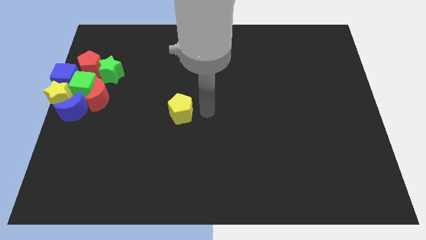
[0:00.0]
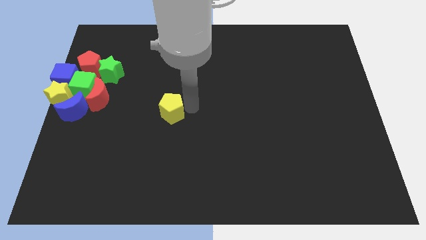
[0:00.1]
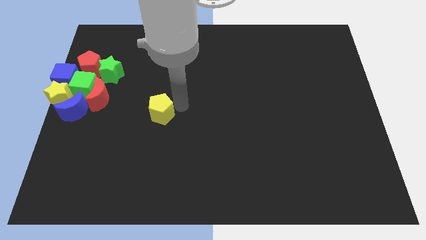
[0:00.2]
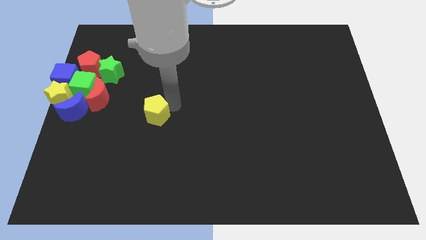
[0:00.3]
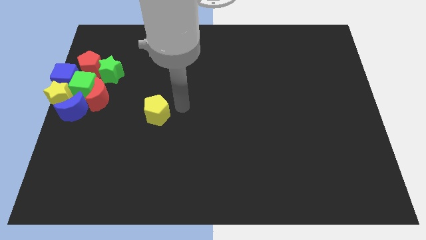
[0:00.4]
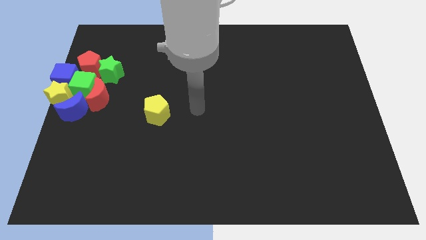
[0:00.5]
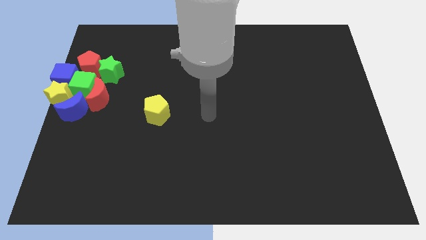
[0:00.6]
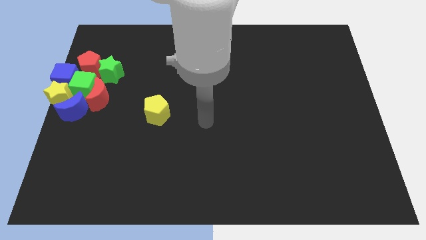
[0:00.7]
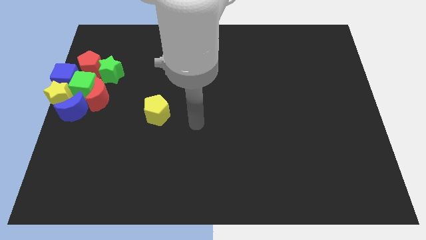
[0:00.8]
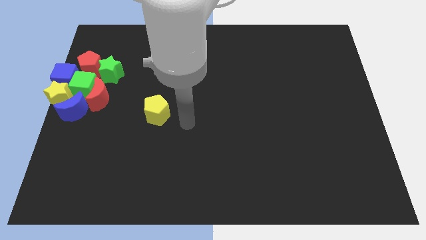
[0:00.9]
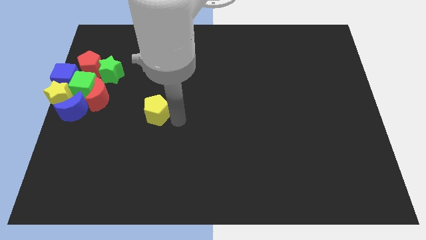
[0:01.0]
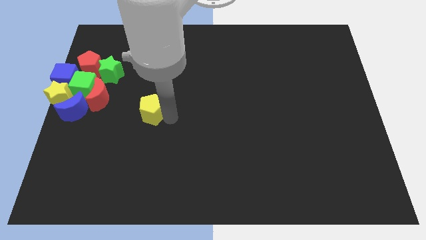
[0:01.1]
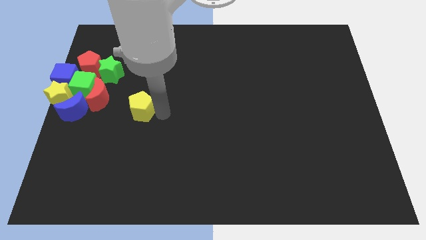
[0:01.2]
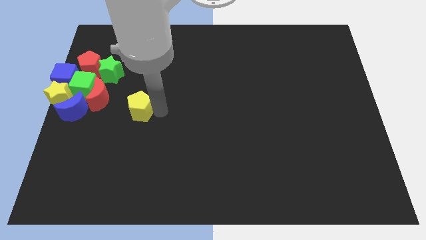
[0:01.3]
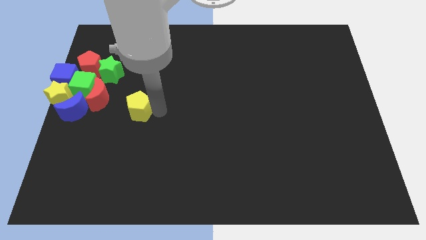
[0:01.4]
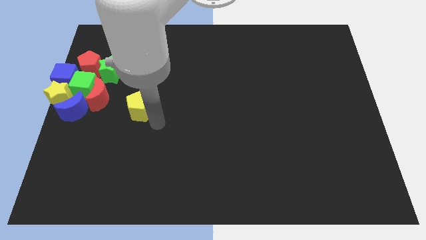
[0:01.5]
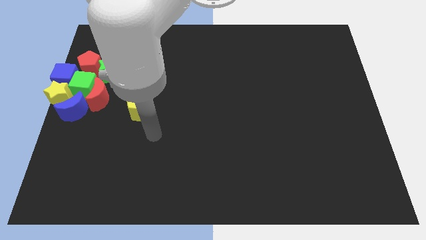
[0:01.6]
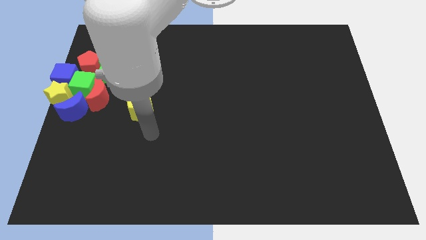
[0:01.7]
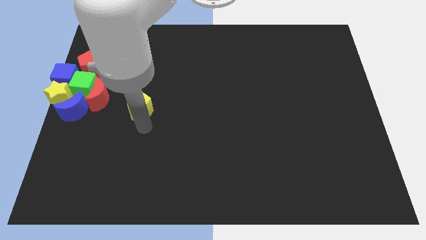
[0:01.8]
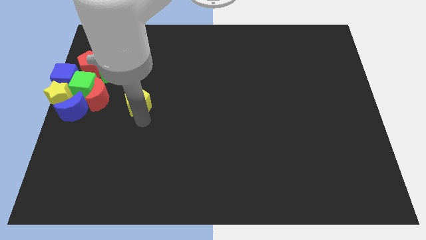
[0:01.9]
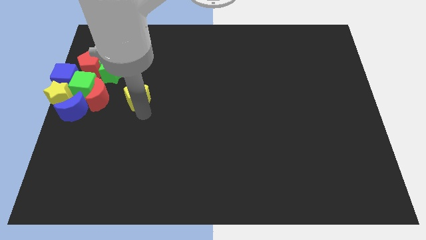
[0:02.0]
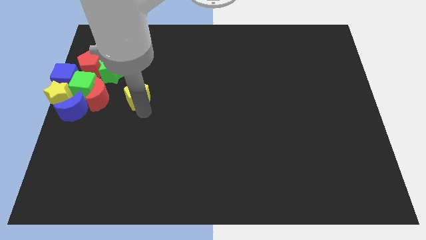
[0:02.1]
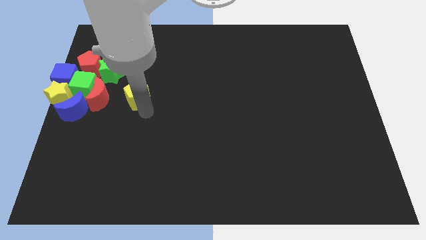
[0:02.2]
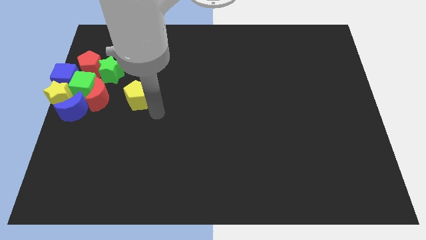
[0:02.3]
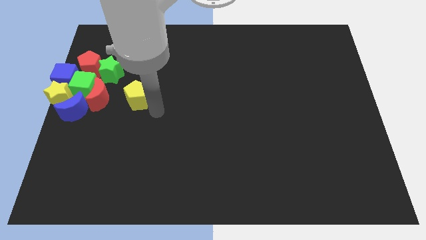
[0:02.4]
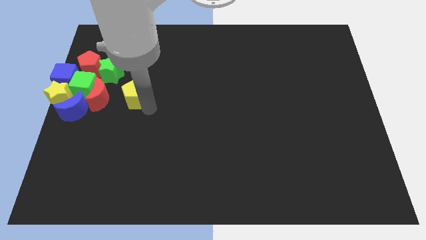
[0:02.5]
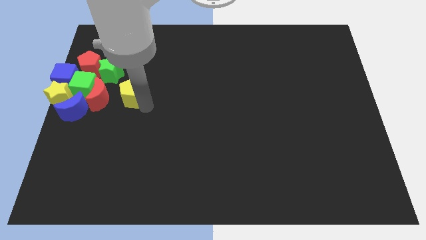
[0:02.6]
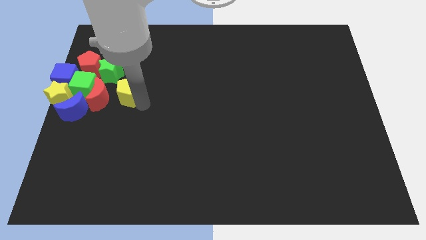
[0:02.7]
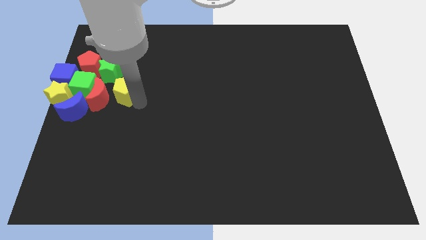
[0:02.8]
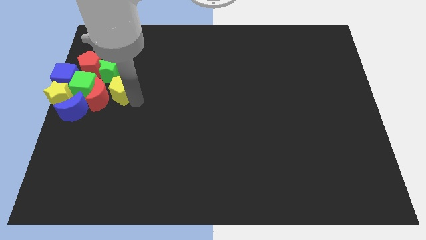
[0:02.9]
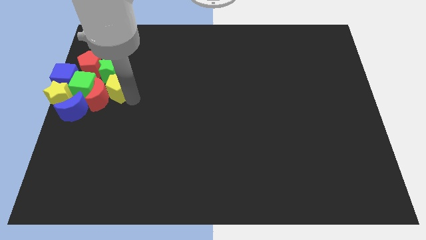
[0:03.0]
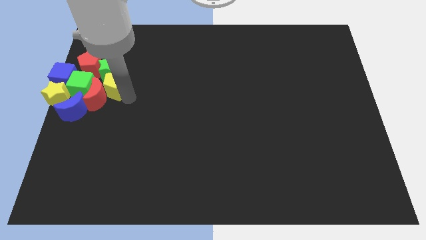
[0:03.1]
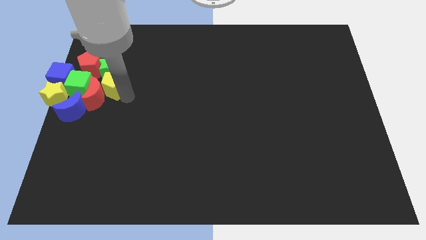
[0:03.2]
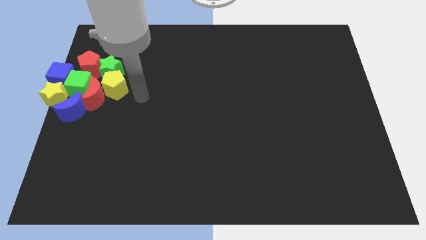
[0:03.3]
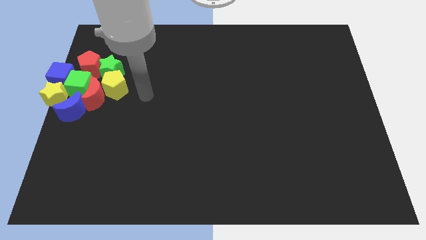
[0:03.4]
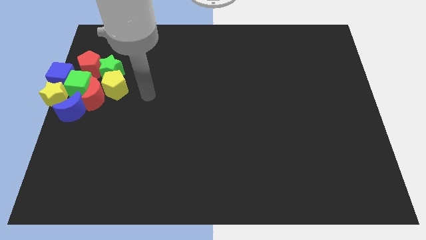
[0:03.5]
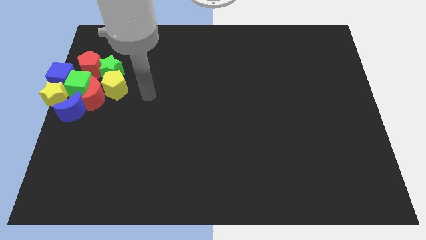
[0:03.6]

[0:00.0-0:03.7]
move the yellow pentagon into the green star

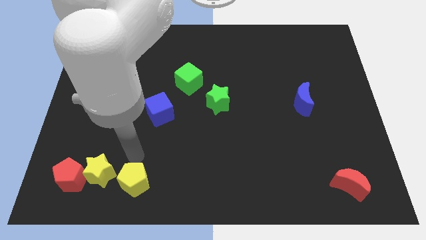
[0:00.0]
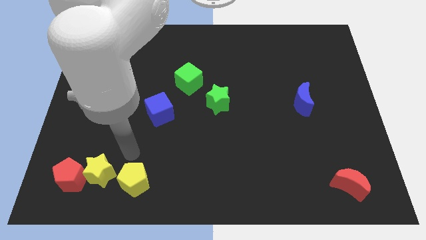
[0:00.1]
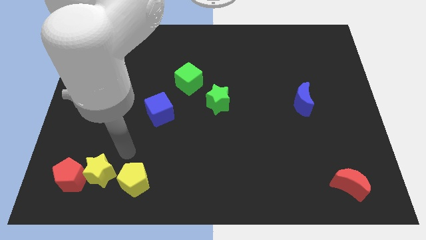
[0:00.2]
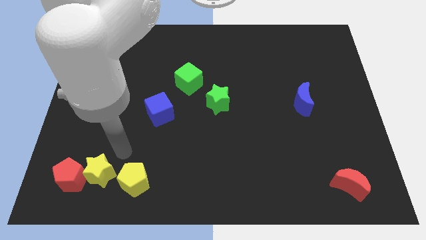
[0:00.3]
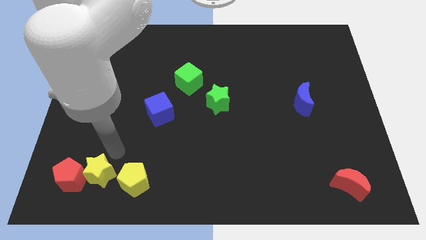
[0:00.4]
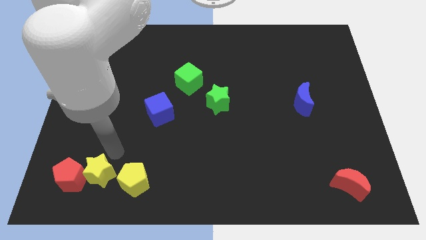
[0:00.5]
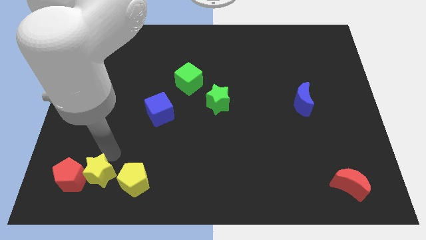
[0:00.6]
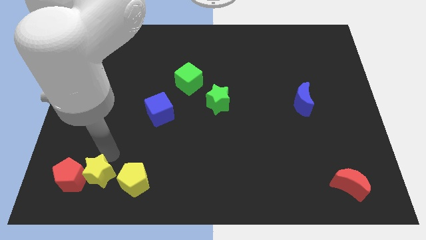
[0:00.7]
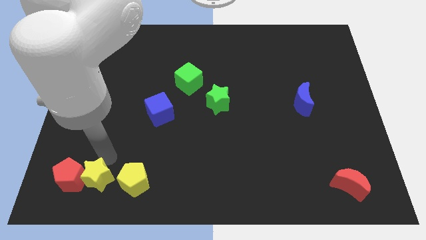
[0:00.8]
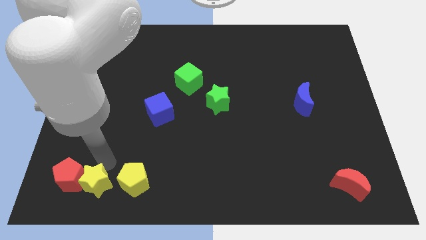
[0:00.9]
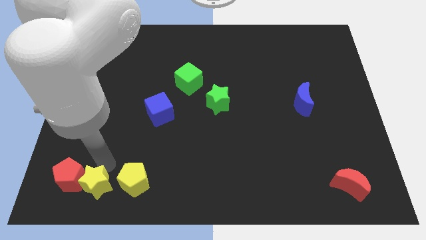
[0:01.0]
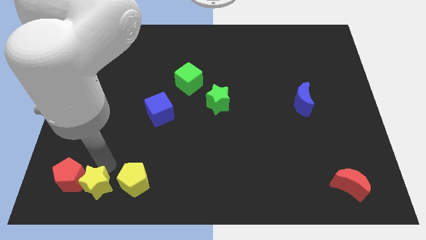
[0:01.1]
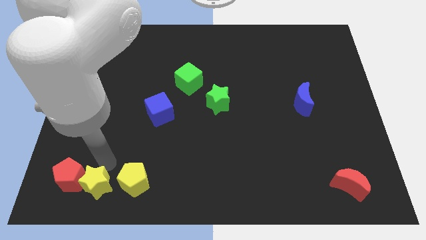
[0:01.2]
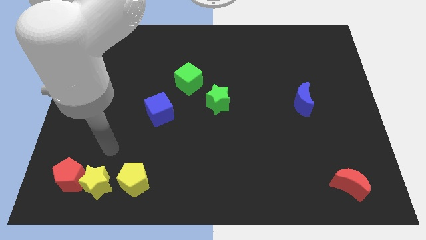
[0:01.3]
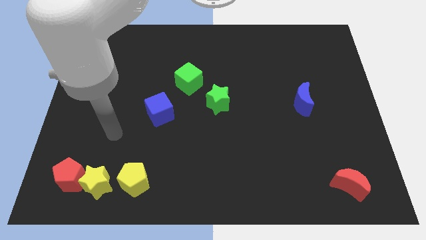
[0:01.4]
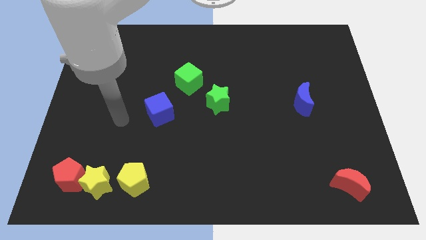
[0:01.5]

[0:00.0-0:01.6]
push the yellow star between red and yellow pentagons

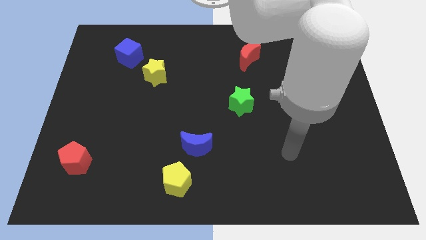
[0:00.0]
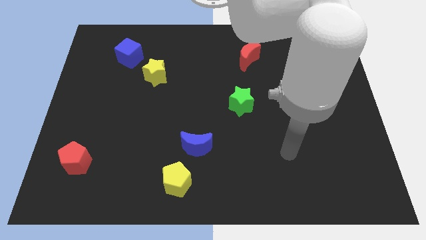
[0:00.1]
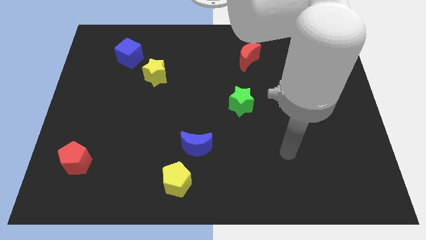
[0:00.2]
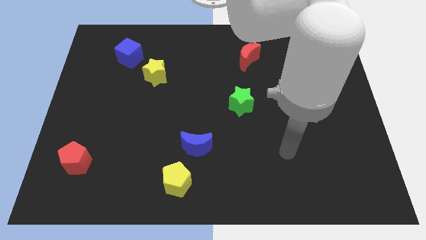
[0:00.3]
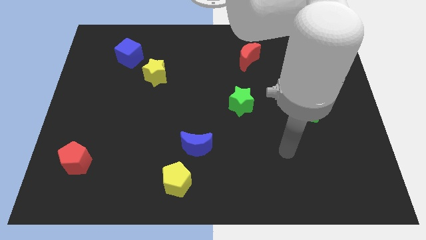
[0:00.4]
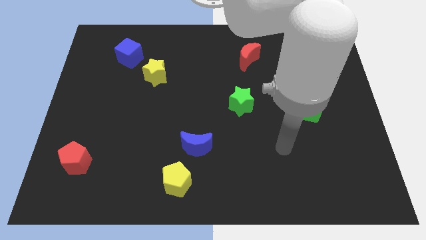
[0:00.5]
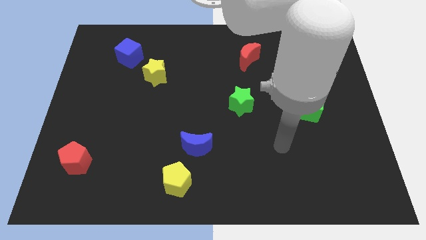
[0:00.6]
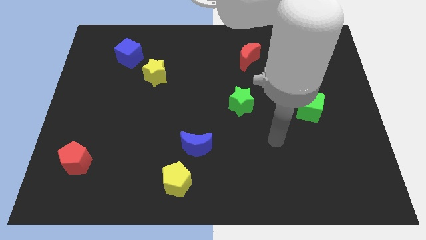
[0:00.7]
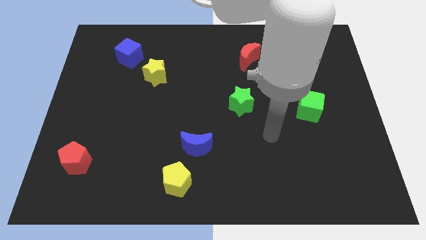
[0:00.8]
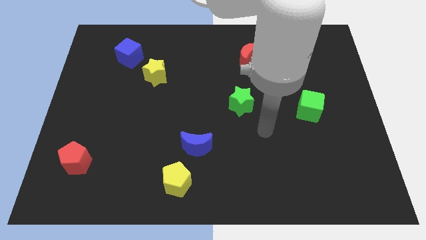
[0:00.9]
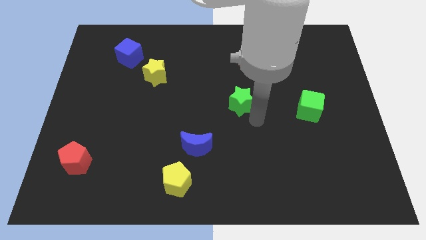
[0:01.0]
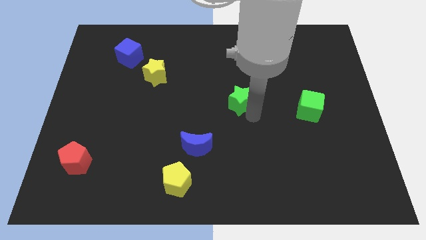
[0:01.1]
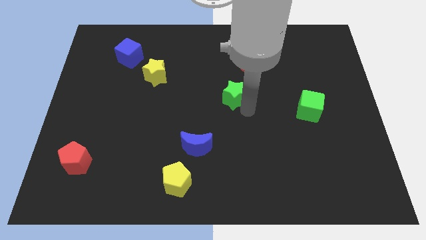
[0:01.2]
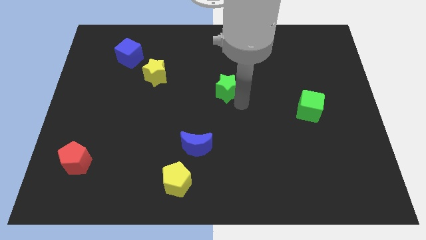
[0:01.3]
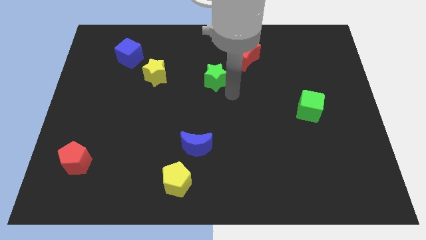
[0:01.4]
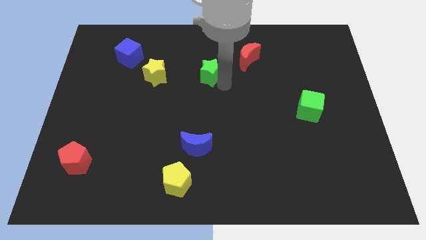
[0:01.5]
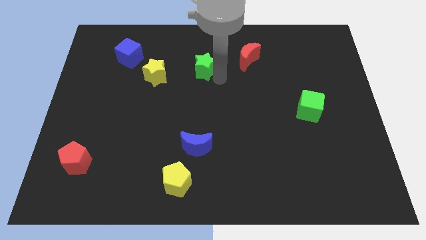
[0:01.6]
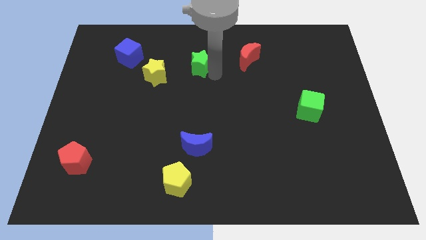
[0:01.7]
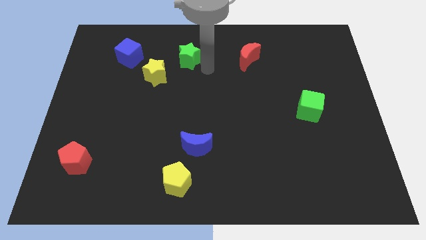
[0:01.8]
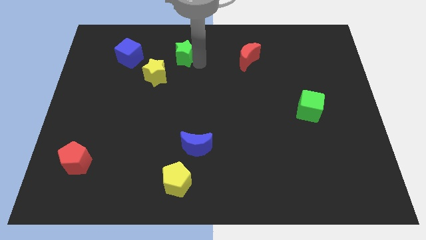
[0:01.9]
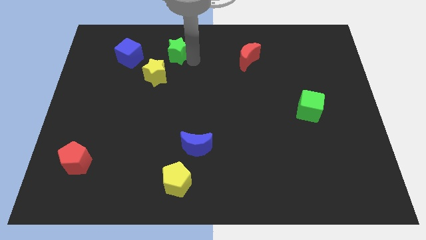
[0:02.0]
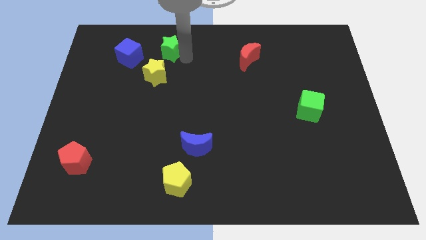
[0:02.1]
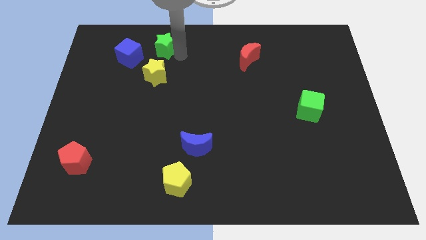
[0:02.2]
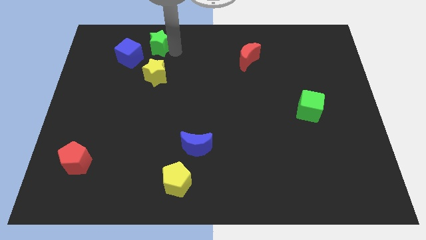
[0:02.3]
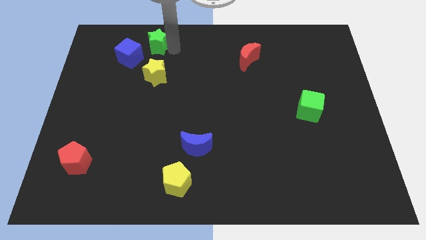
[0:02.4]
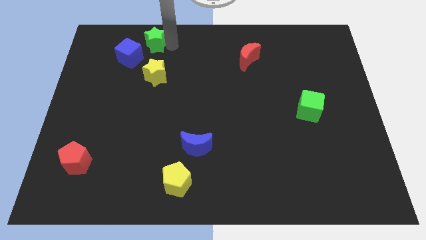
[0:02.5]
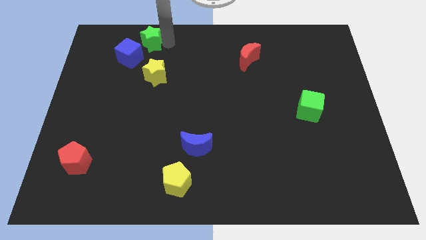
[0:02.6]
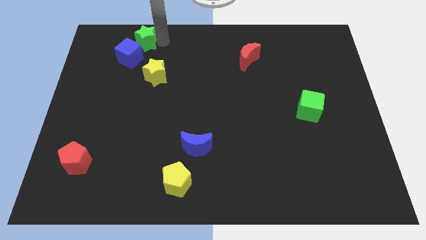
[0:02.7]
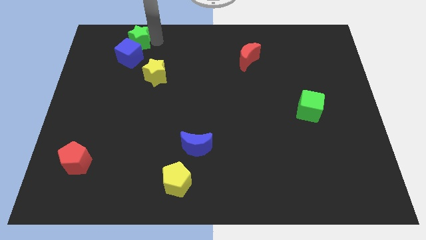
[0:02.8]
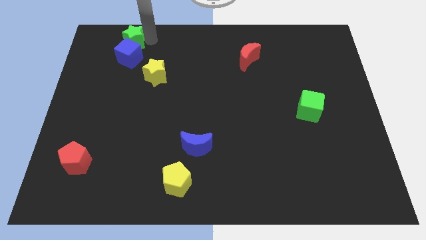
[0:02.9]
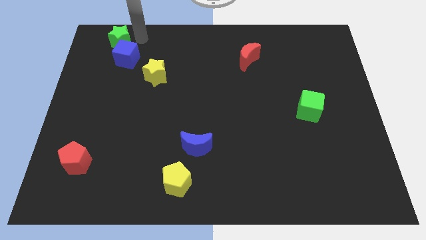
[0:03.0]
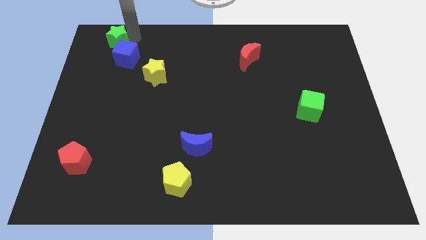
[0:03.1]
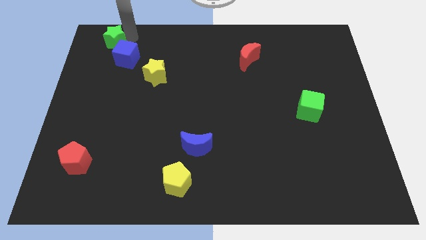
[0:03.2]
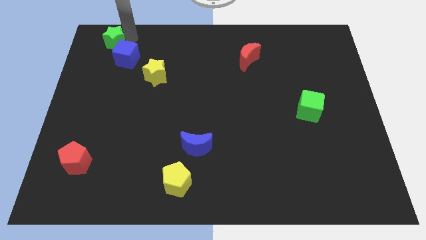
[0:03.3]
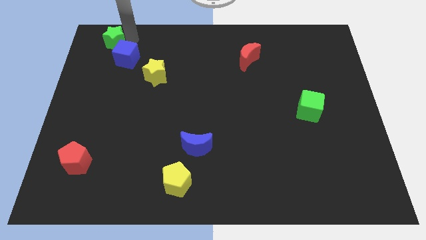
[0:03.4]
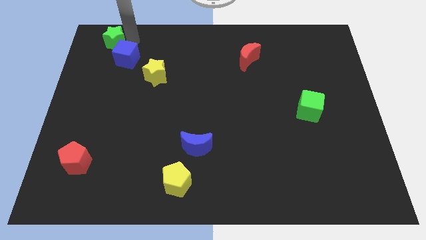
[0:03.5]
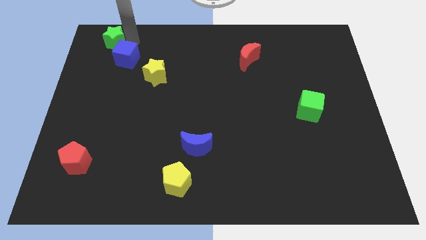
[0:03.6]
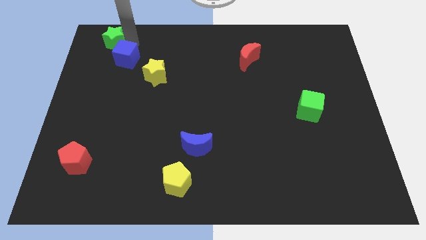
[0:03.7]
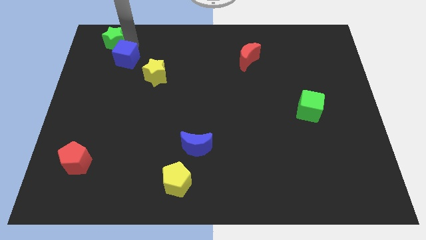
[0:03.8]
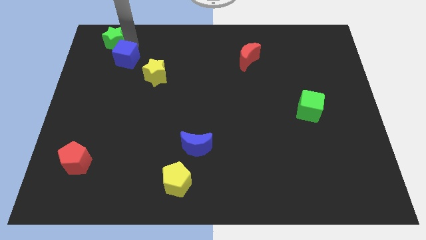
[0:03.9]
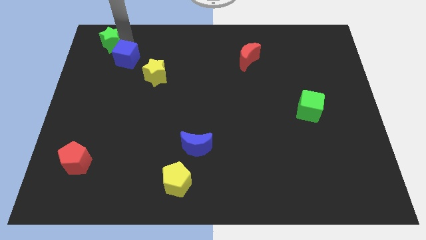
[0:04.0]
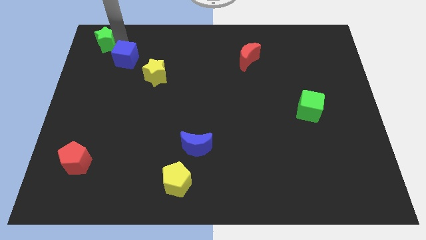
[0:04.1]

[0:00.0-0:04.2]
push the green star above the red pentagon
